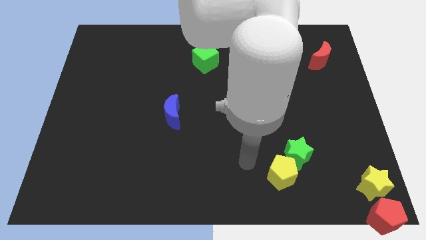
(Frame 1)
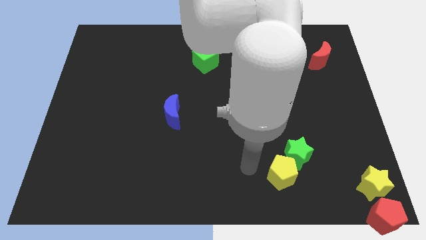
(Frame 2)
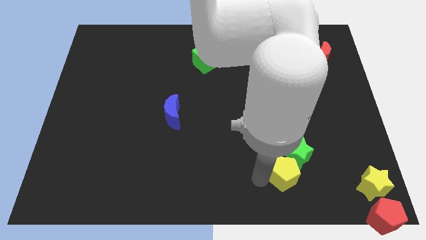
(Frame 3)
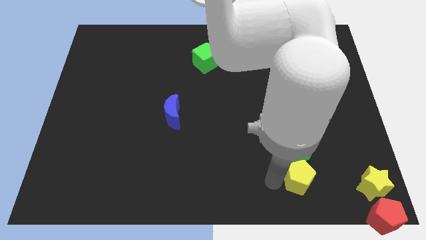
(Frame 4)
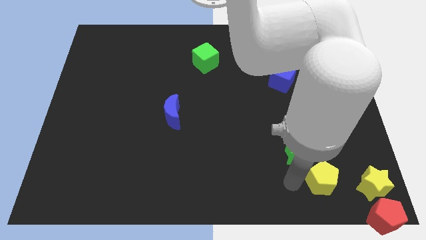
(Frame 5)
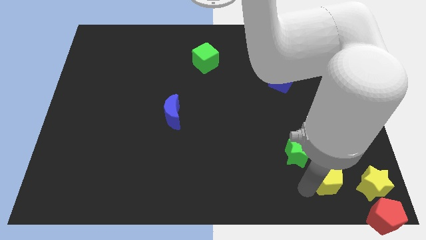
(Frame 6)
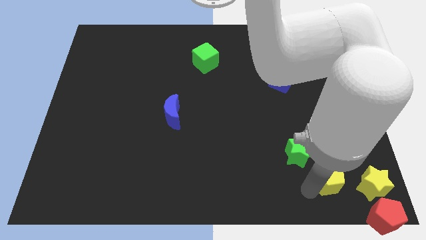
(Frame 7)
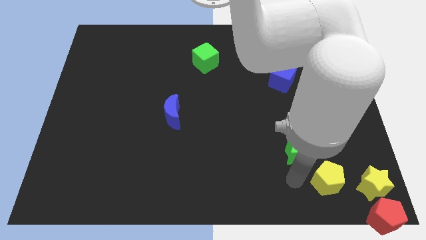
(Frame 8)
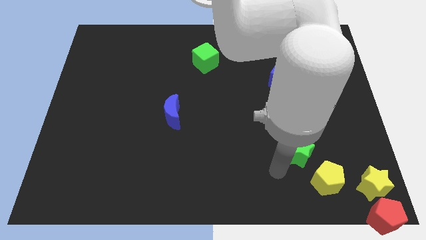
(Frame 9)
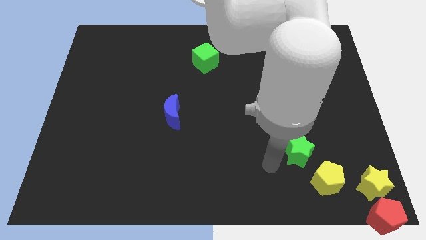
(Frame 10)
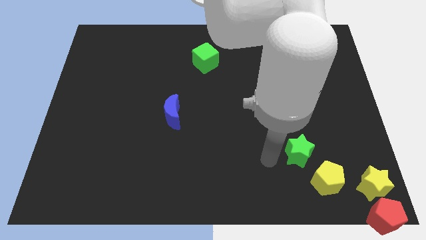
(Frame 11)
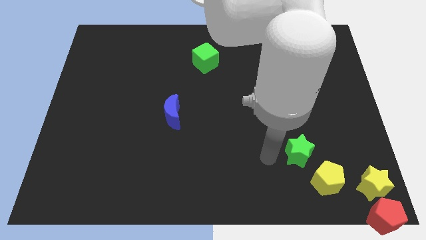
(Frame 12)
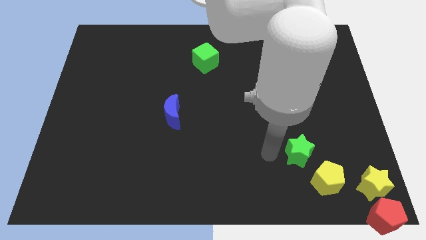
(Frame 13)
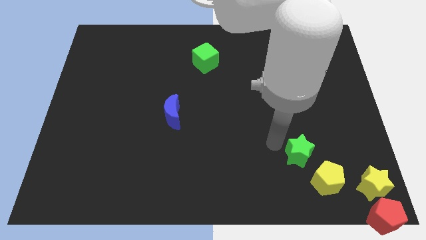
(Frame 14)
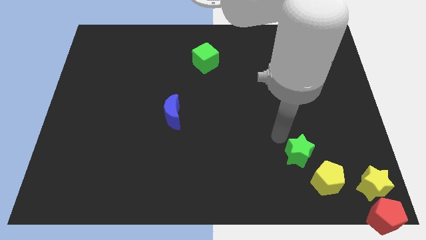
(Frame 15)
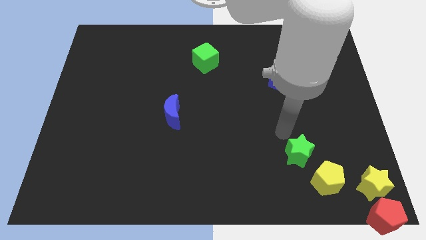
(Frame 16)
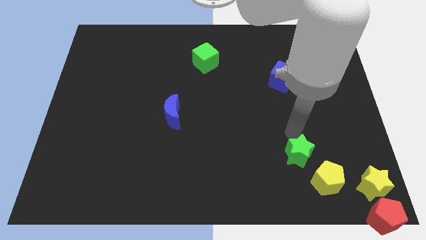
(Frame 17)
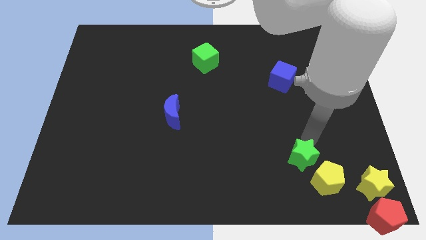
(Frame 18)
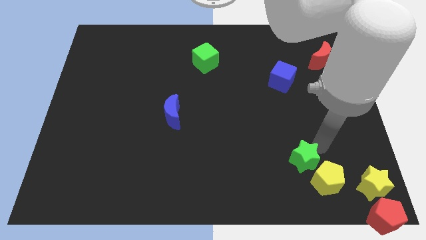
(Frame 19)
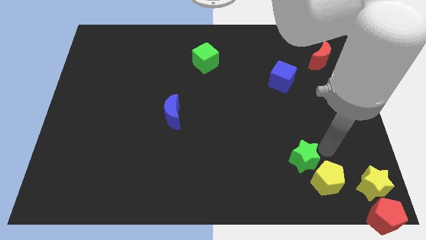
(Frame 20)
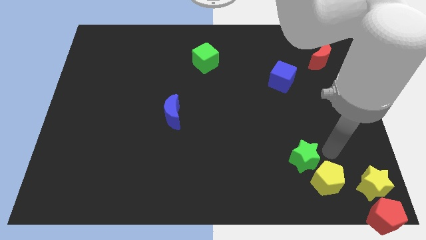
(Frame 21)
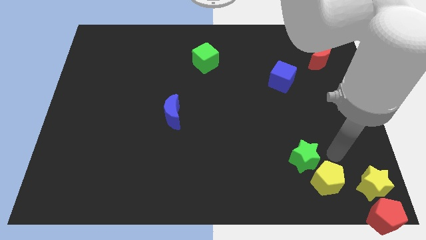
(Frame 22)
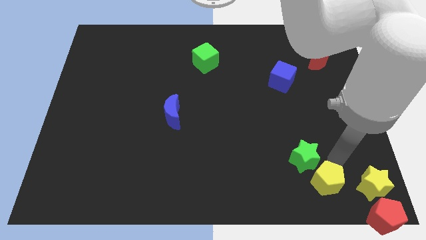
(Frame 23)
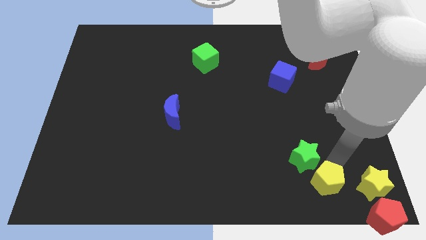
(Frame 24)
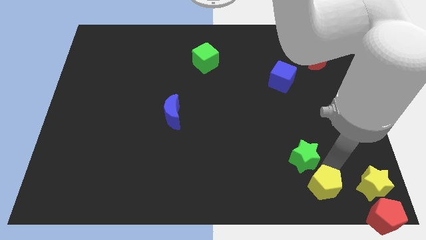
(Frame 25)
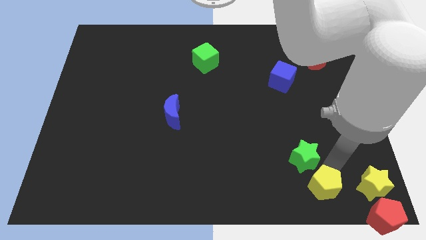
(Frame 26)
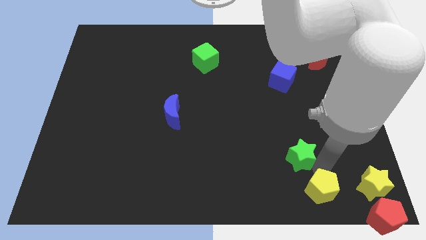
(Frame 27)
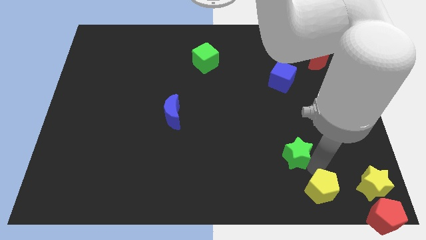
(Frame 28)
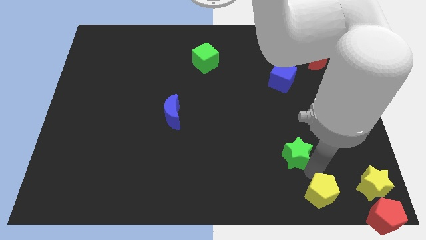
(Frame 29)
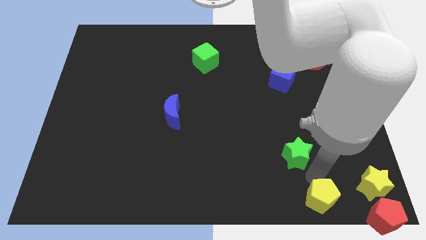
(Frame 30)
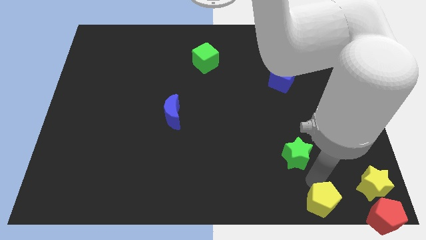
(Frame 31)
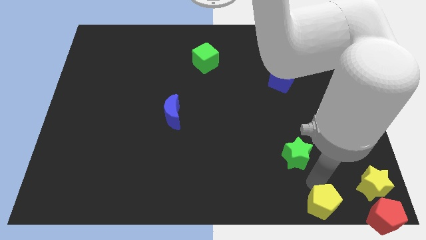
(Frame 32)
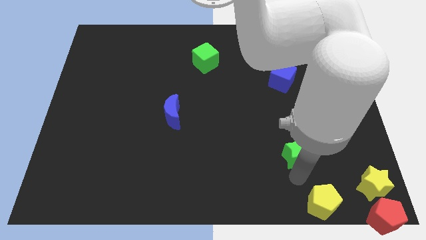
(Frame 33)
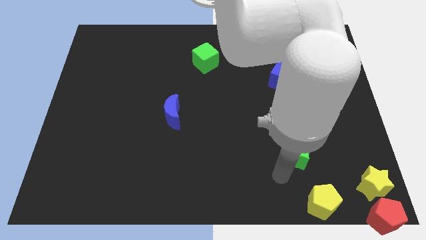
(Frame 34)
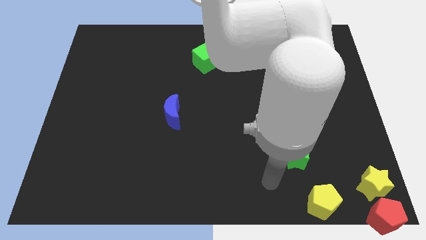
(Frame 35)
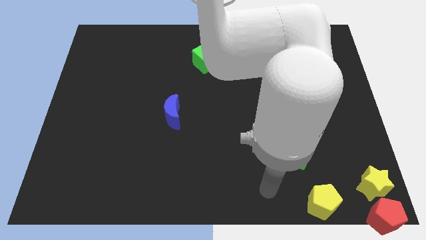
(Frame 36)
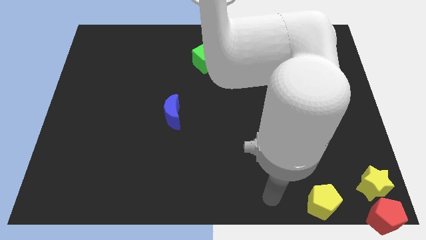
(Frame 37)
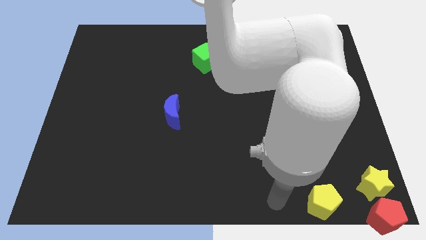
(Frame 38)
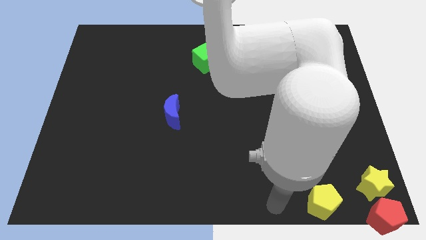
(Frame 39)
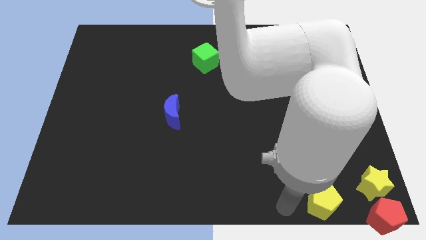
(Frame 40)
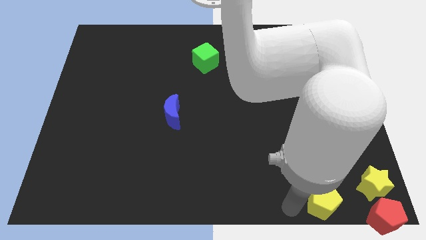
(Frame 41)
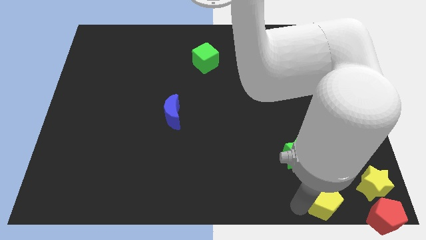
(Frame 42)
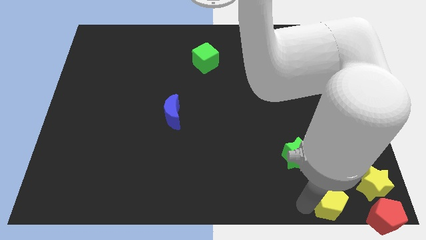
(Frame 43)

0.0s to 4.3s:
place the yellow pentagon left to the red pentagon

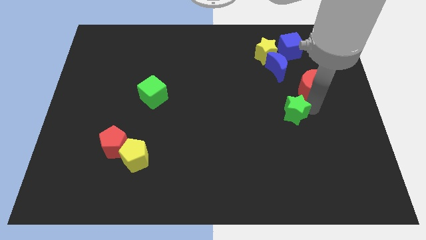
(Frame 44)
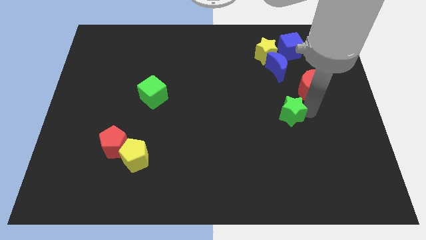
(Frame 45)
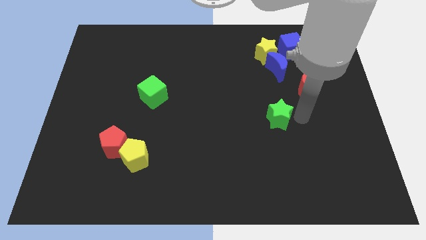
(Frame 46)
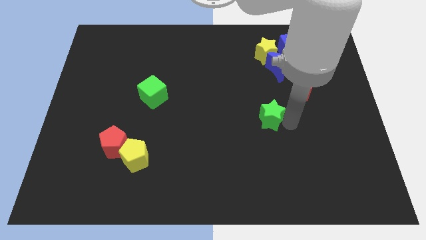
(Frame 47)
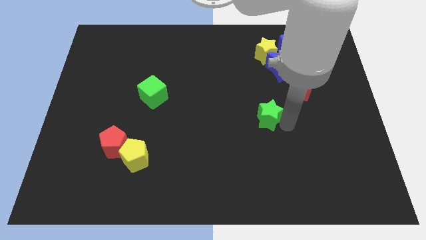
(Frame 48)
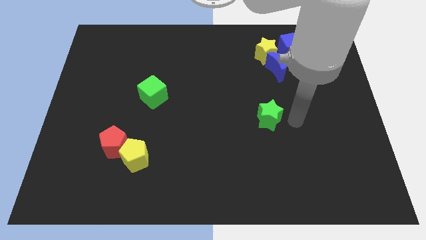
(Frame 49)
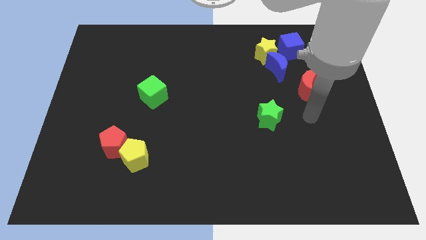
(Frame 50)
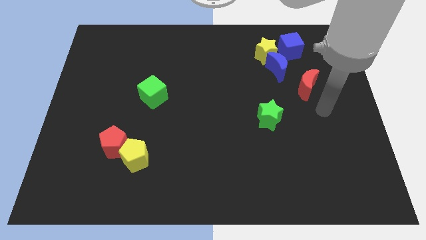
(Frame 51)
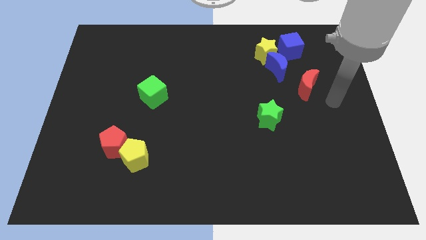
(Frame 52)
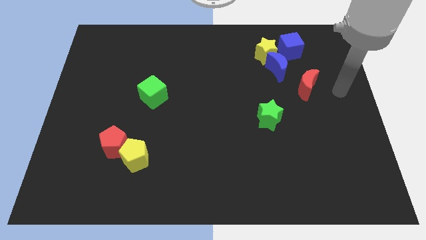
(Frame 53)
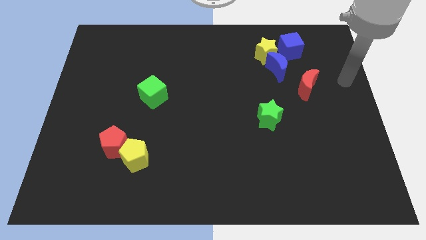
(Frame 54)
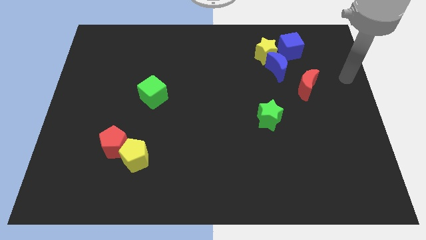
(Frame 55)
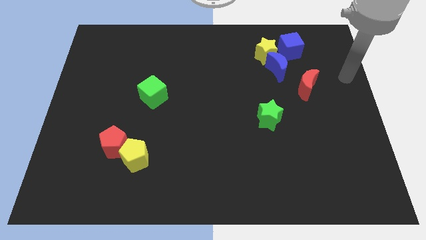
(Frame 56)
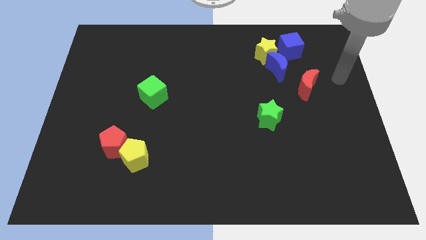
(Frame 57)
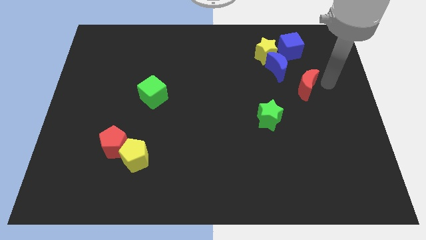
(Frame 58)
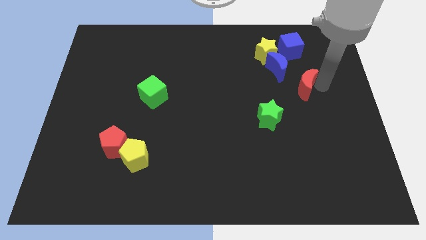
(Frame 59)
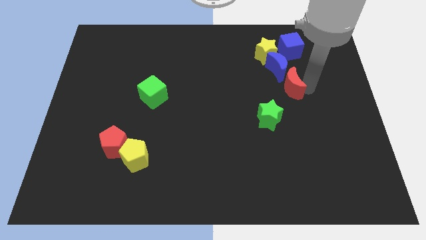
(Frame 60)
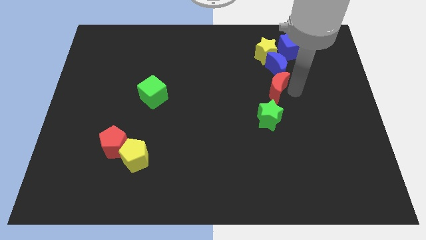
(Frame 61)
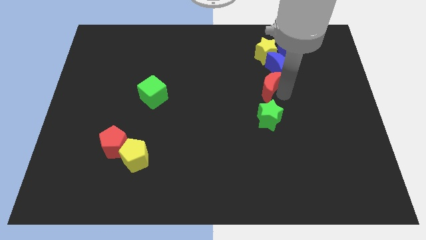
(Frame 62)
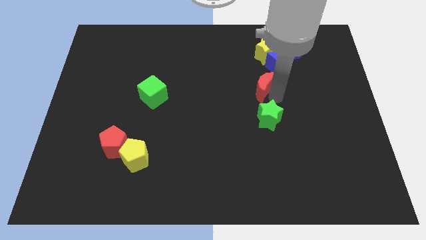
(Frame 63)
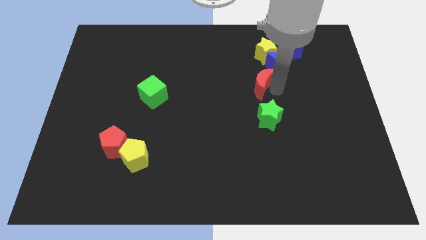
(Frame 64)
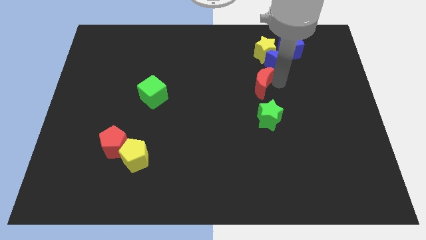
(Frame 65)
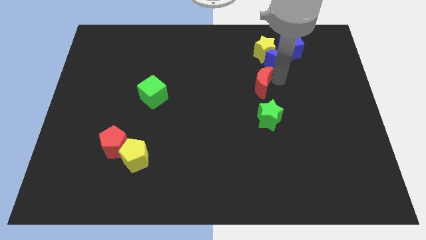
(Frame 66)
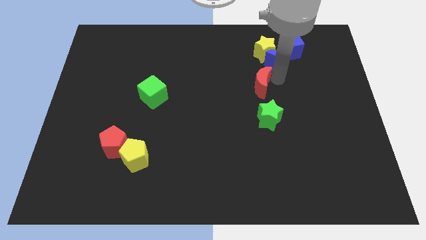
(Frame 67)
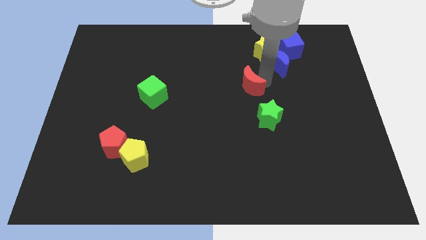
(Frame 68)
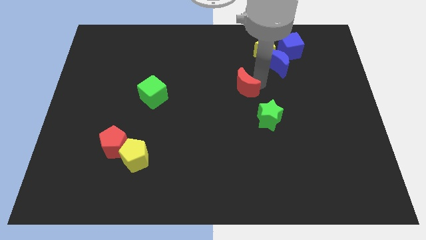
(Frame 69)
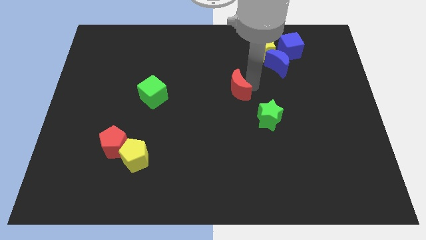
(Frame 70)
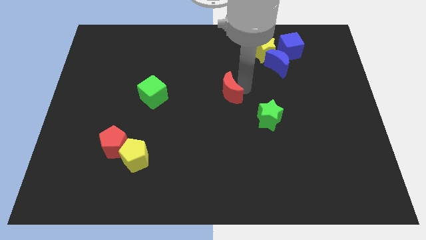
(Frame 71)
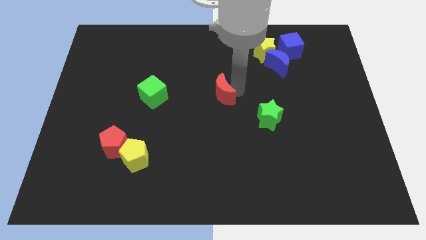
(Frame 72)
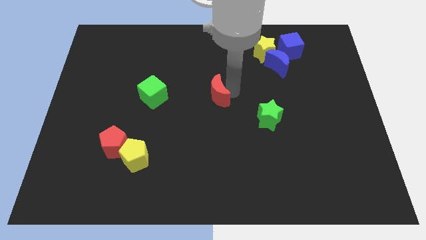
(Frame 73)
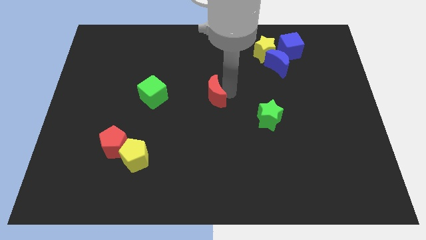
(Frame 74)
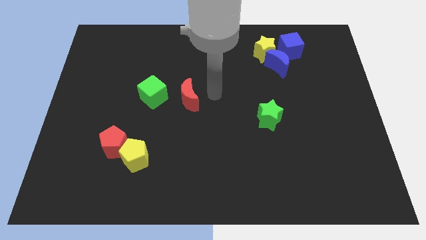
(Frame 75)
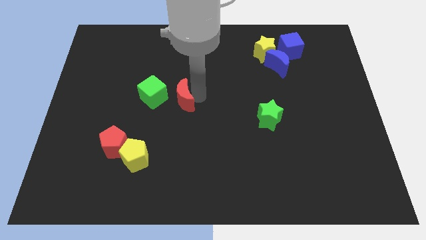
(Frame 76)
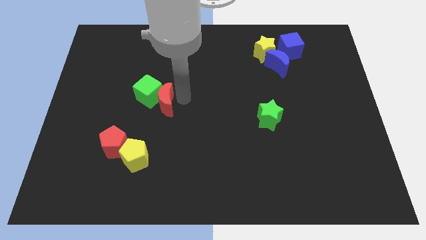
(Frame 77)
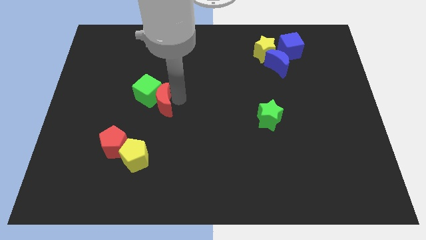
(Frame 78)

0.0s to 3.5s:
push red moon beside green cube

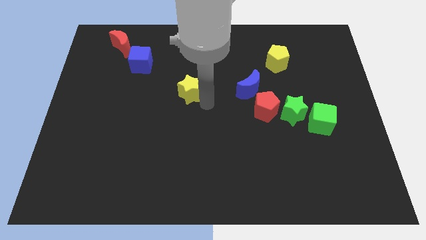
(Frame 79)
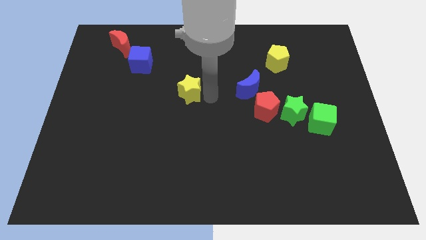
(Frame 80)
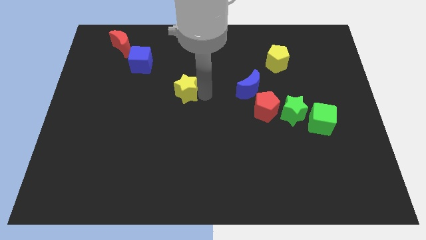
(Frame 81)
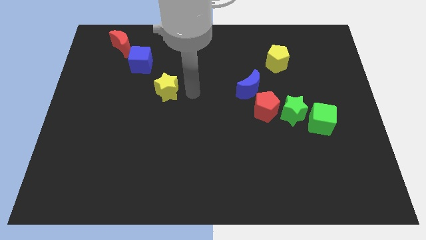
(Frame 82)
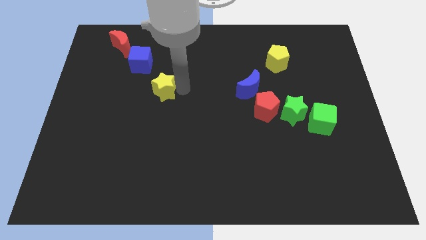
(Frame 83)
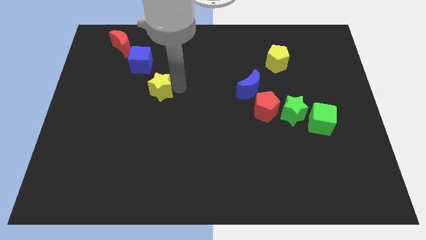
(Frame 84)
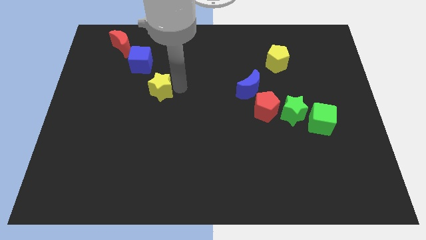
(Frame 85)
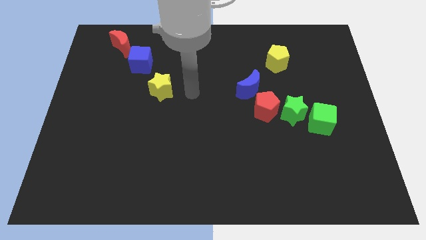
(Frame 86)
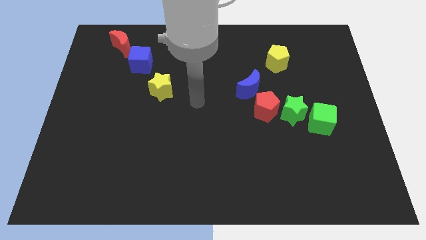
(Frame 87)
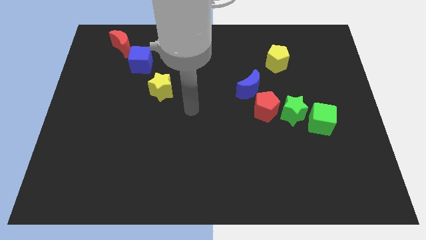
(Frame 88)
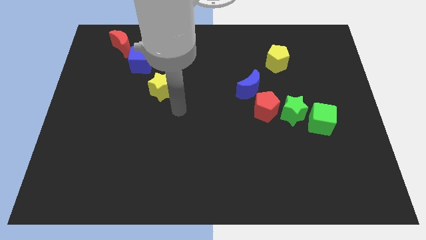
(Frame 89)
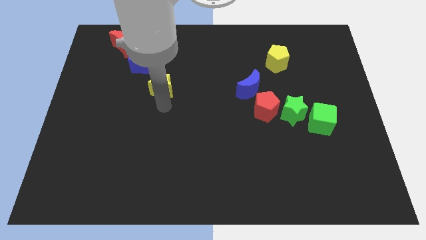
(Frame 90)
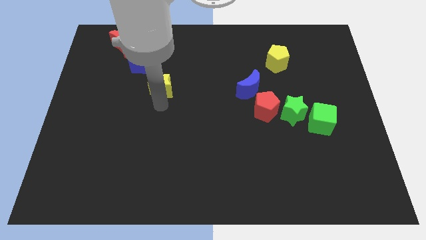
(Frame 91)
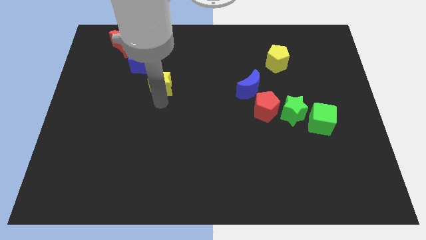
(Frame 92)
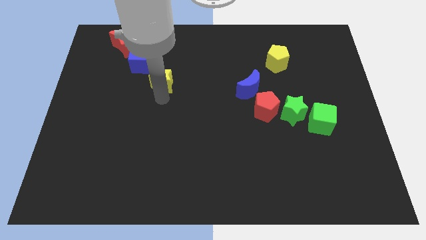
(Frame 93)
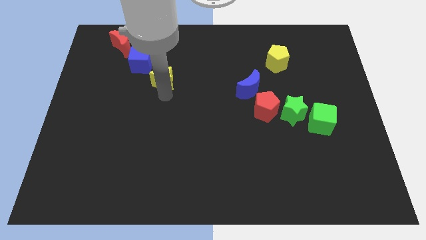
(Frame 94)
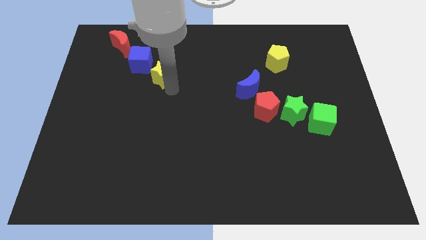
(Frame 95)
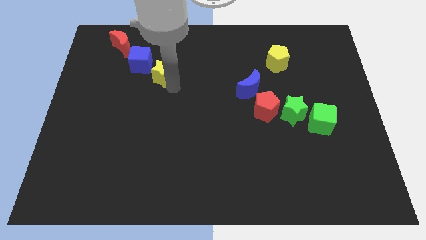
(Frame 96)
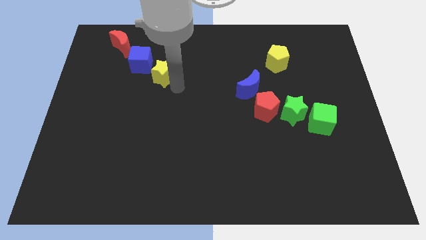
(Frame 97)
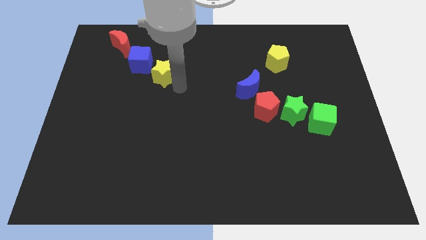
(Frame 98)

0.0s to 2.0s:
put the yellow star at the bottom right of the blue cube
